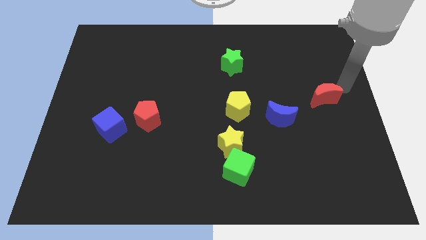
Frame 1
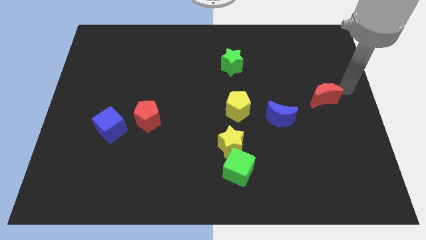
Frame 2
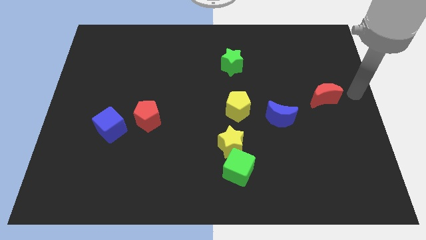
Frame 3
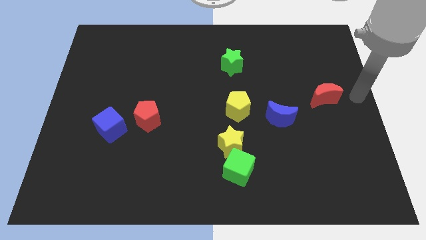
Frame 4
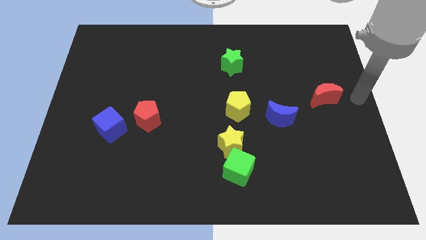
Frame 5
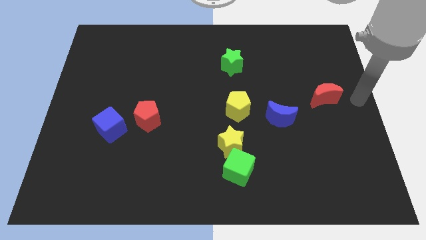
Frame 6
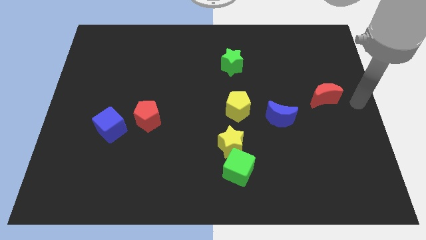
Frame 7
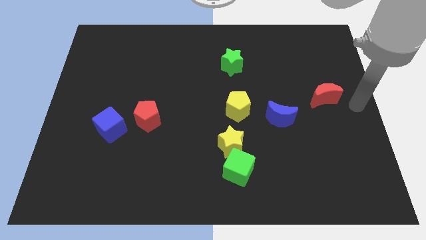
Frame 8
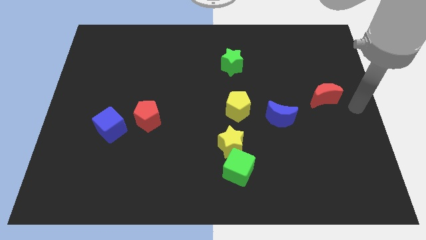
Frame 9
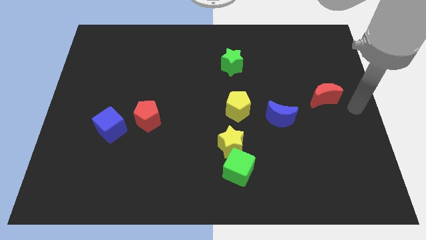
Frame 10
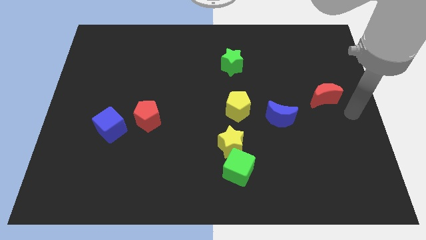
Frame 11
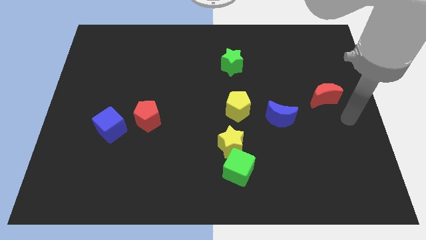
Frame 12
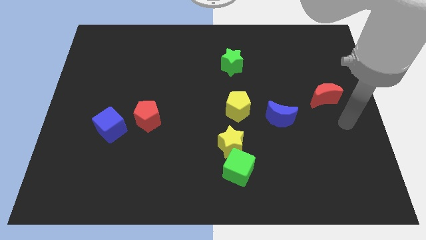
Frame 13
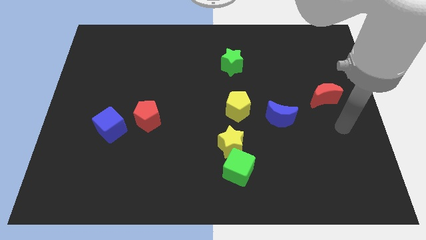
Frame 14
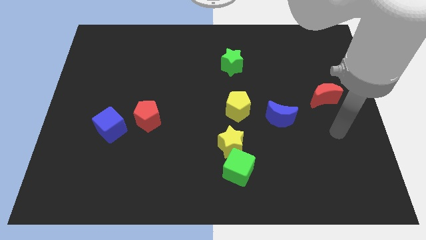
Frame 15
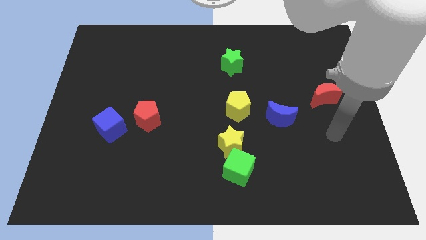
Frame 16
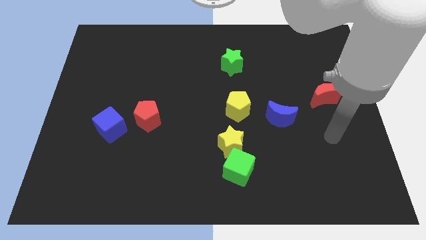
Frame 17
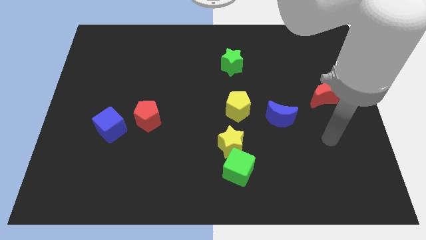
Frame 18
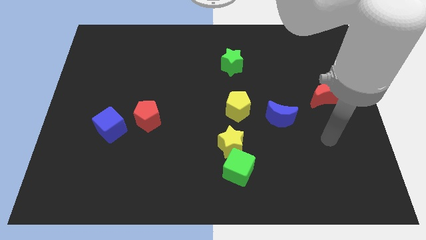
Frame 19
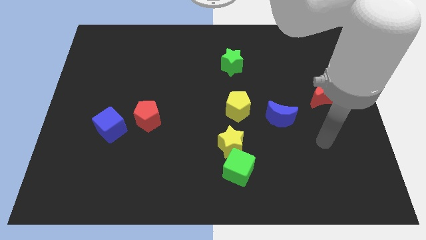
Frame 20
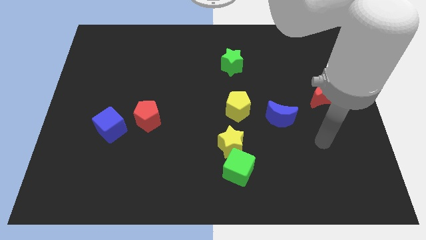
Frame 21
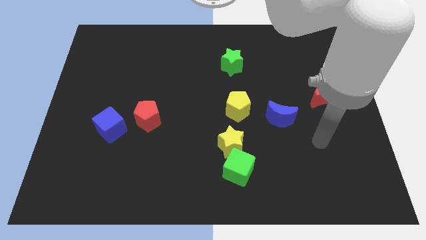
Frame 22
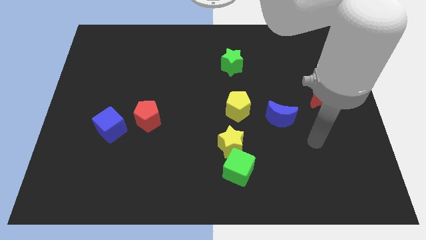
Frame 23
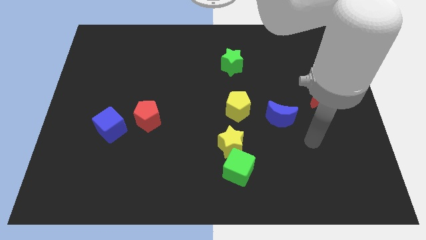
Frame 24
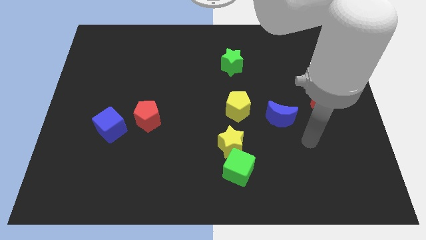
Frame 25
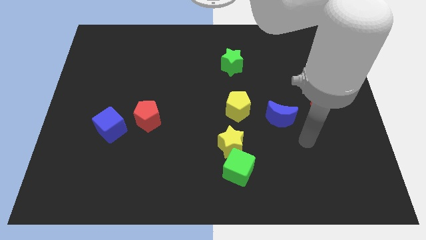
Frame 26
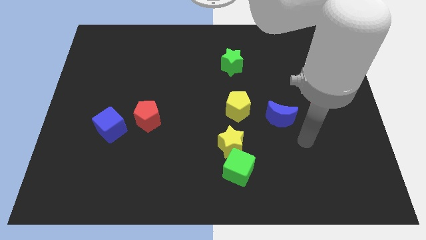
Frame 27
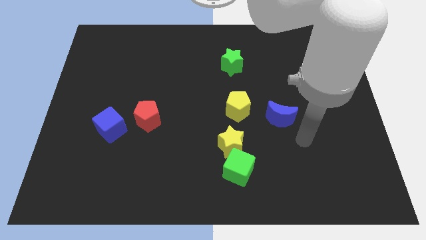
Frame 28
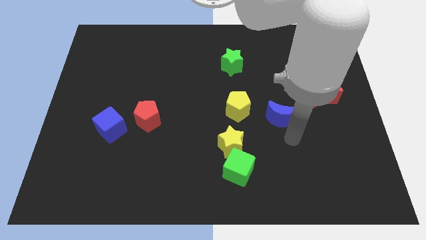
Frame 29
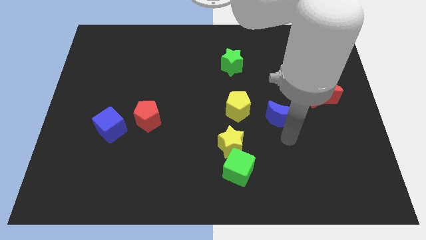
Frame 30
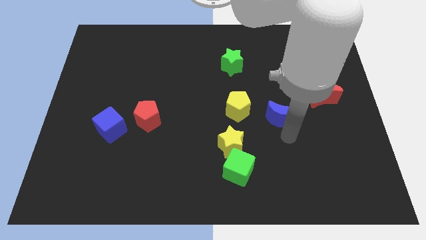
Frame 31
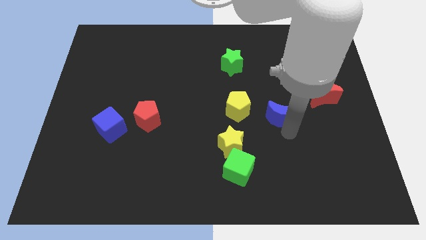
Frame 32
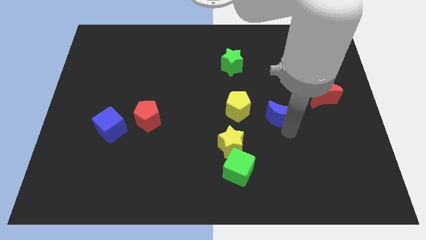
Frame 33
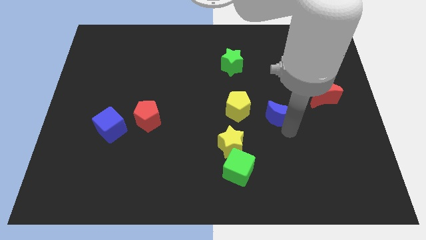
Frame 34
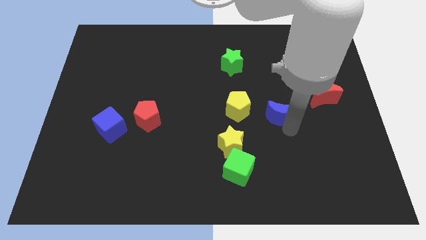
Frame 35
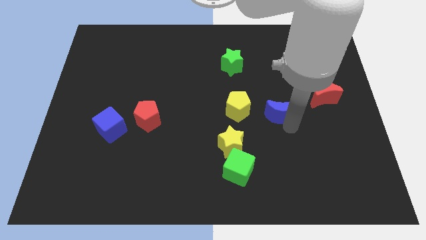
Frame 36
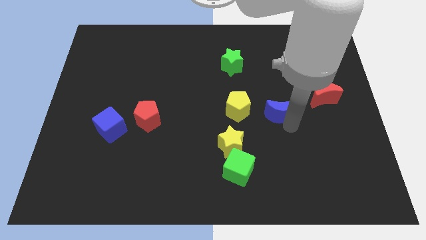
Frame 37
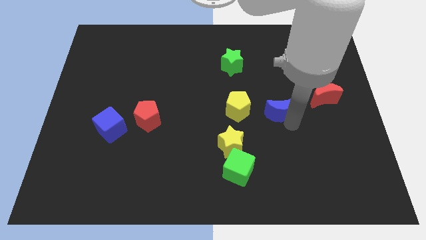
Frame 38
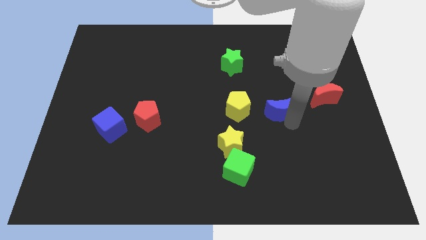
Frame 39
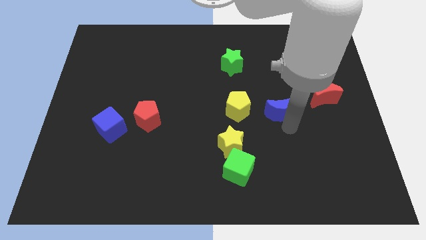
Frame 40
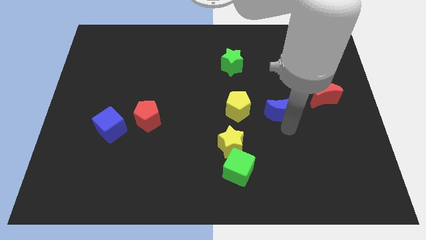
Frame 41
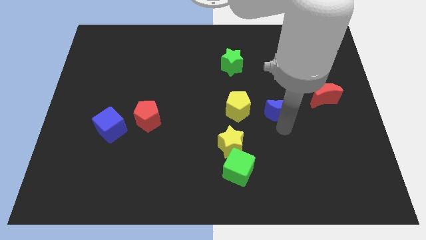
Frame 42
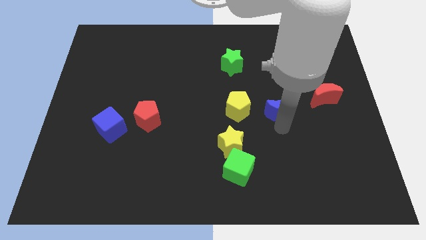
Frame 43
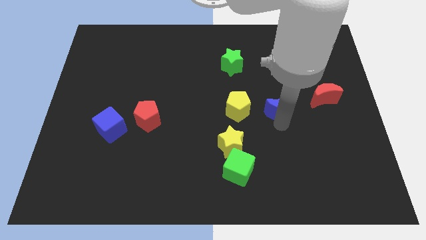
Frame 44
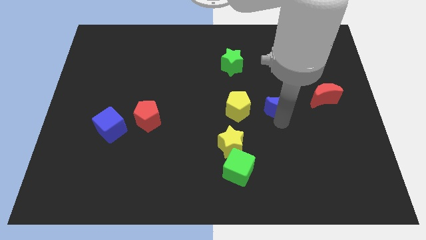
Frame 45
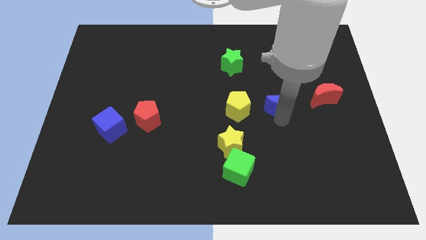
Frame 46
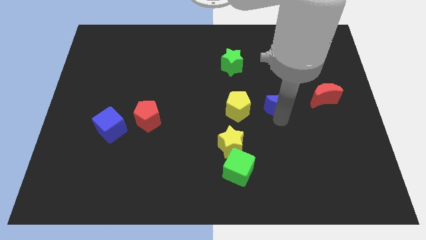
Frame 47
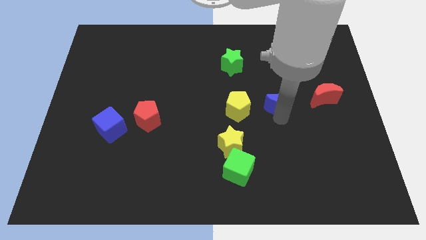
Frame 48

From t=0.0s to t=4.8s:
place the blue moon in between the red moon and yellow pentagon

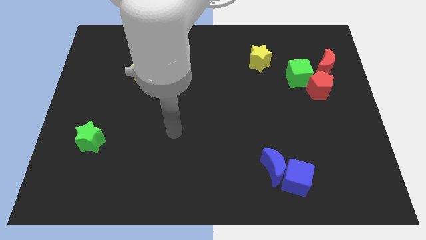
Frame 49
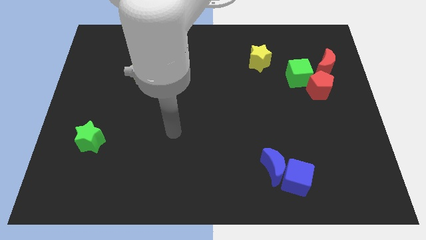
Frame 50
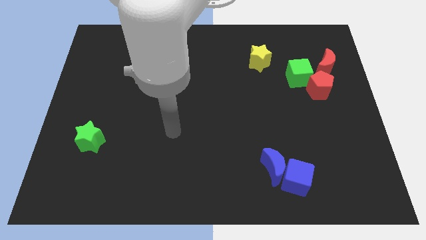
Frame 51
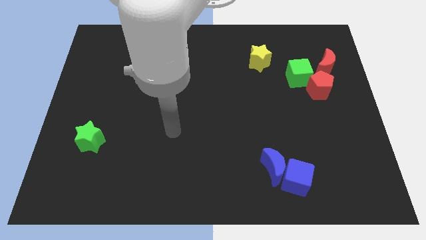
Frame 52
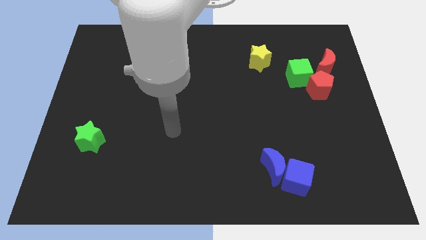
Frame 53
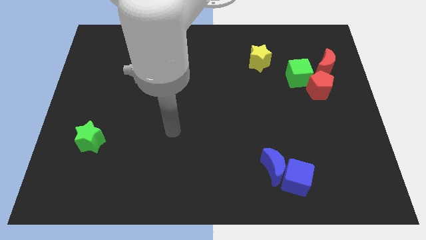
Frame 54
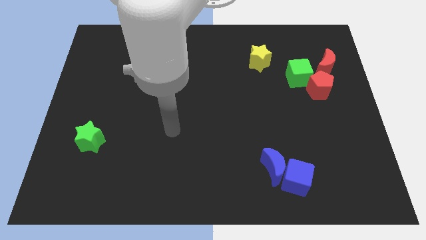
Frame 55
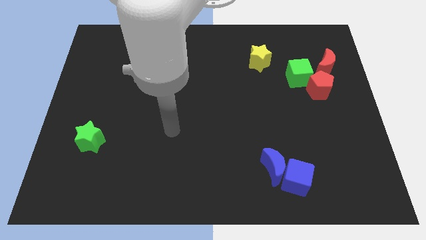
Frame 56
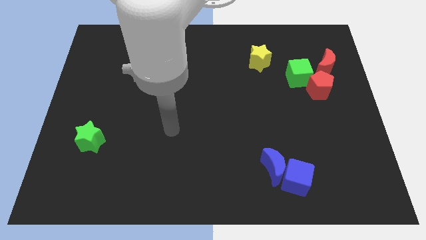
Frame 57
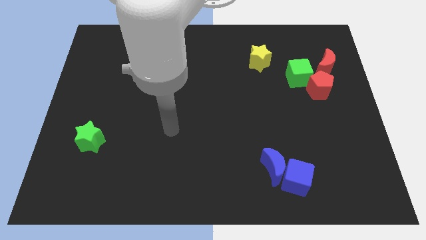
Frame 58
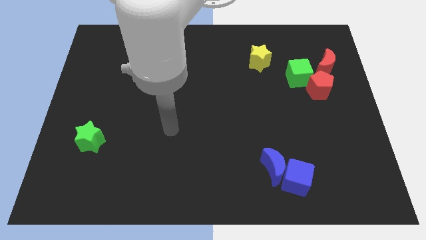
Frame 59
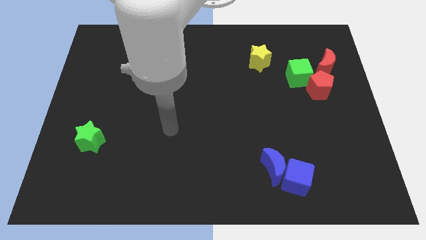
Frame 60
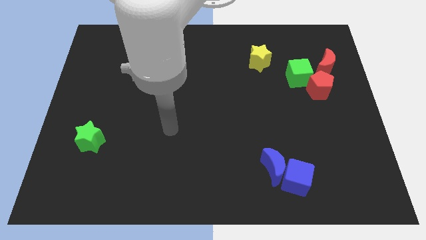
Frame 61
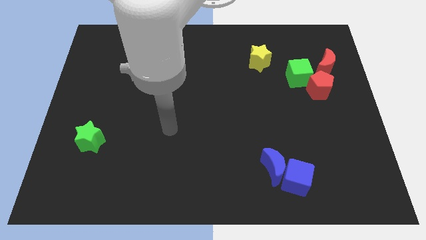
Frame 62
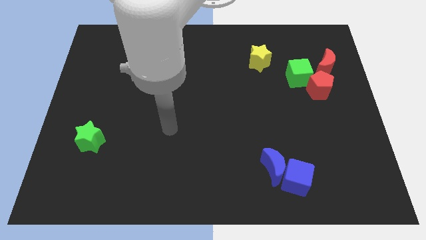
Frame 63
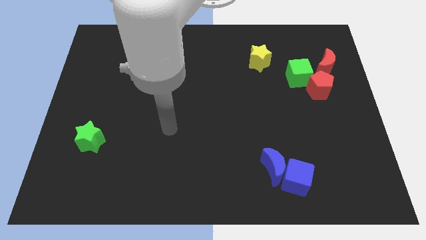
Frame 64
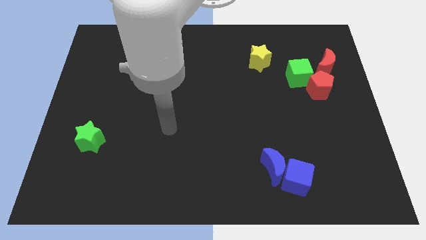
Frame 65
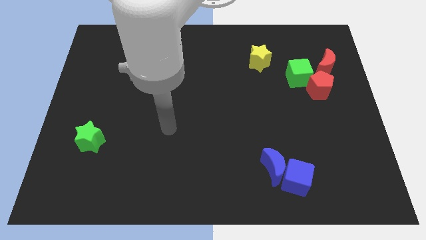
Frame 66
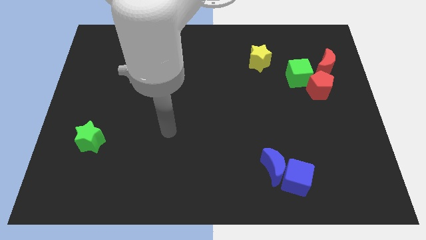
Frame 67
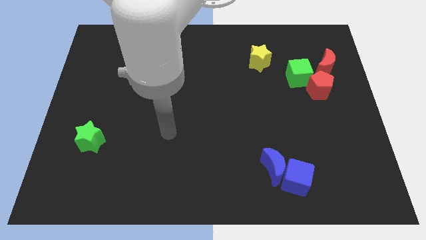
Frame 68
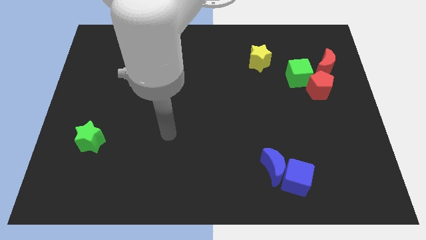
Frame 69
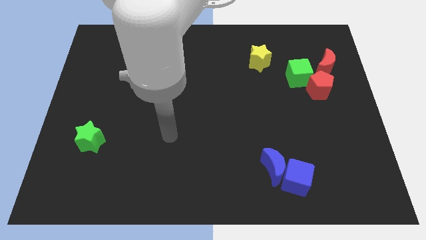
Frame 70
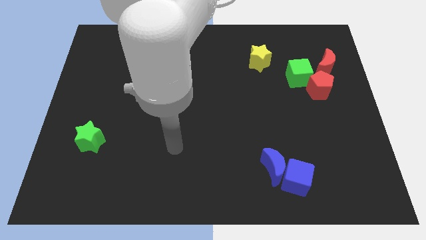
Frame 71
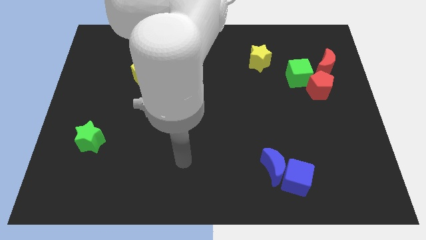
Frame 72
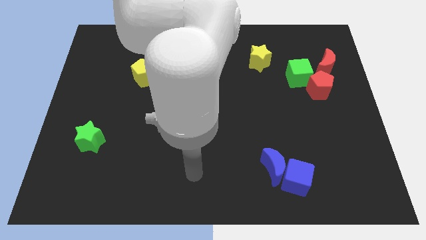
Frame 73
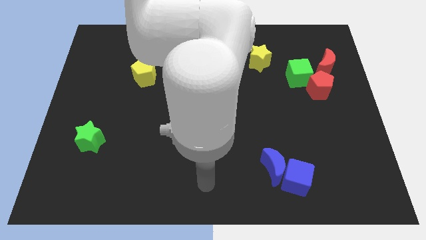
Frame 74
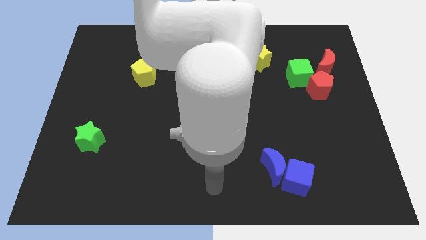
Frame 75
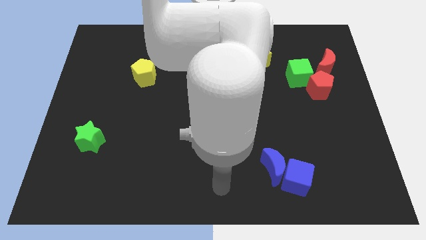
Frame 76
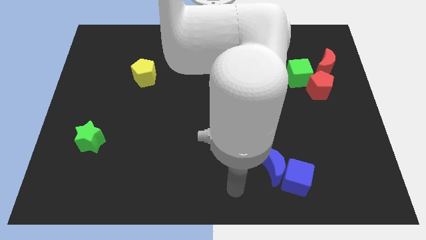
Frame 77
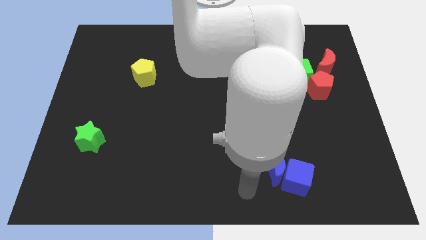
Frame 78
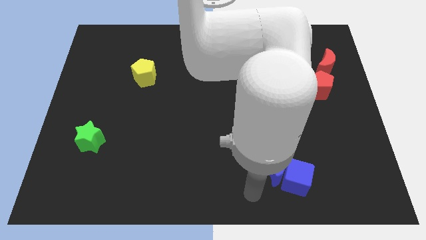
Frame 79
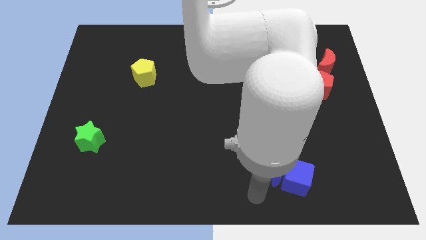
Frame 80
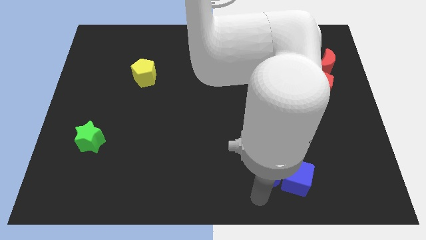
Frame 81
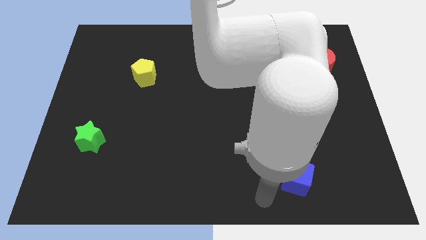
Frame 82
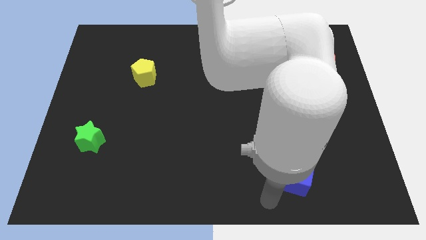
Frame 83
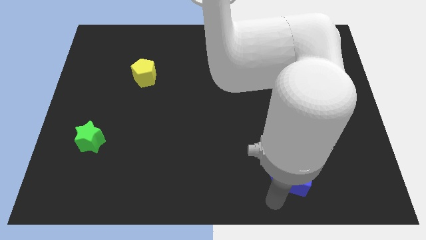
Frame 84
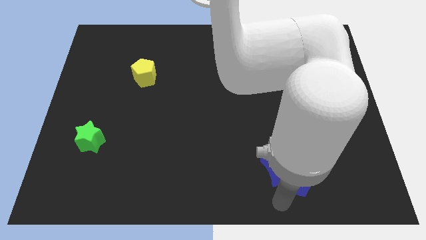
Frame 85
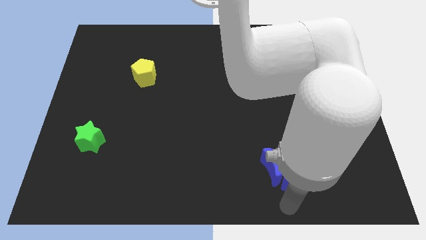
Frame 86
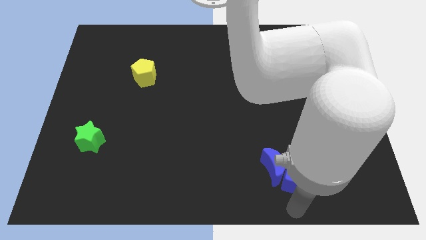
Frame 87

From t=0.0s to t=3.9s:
move your arm to the bottom of the blue cube

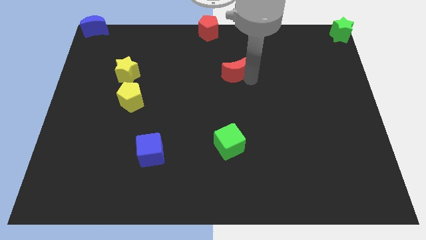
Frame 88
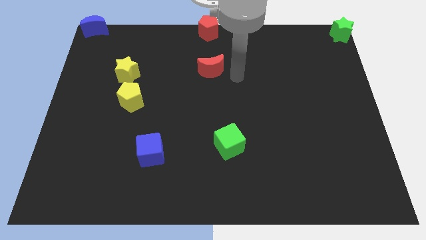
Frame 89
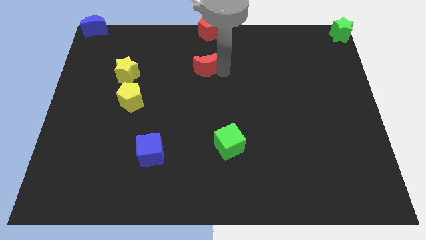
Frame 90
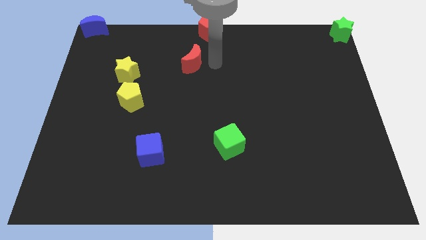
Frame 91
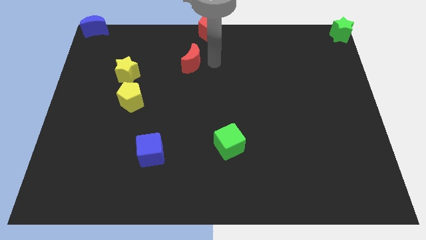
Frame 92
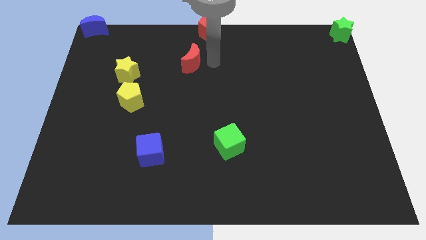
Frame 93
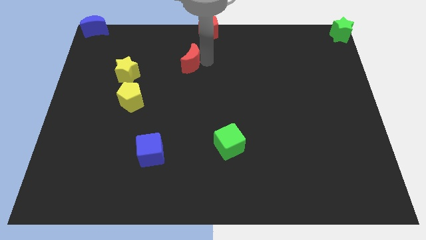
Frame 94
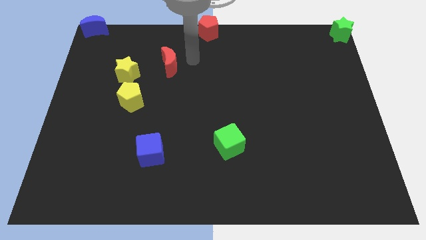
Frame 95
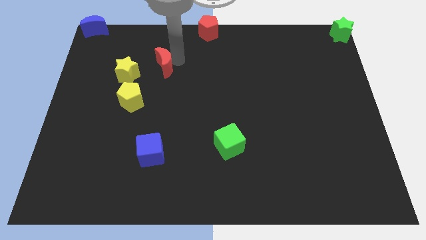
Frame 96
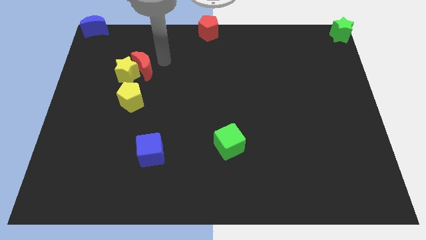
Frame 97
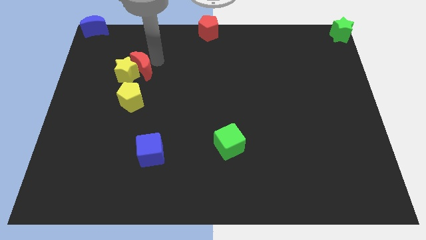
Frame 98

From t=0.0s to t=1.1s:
place the red moon diagonally to red pentagon
